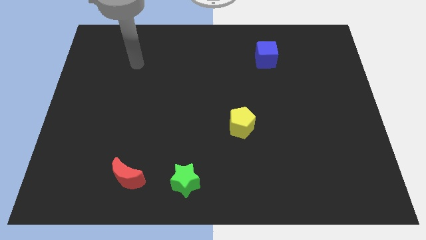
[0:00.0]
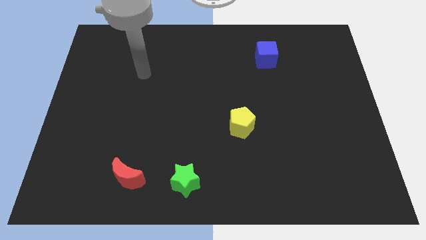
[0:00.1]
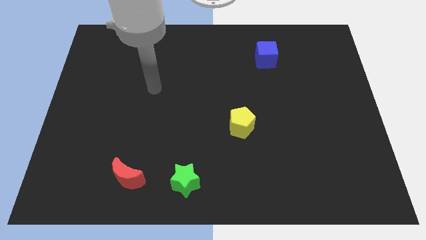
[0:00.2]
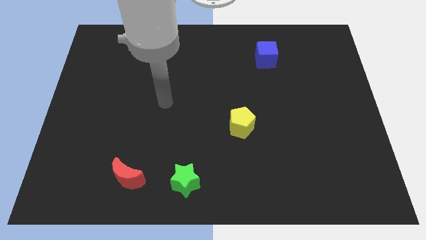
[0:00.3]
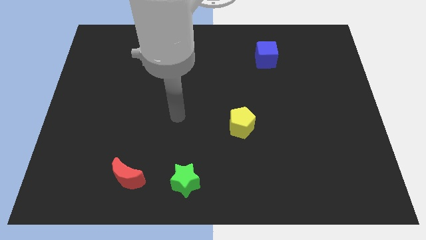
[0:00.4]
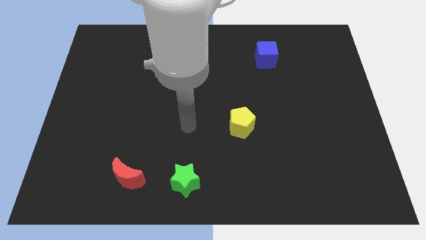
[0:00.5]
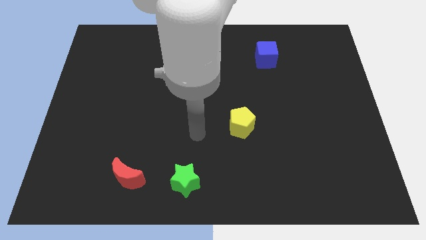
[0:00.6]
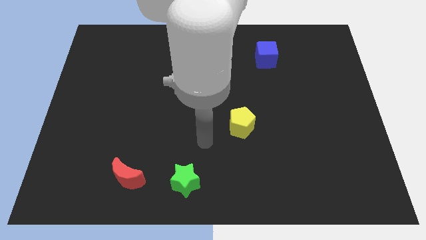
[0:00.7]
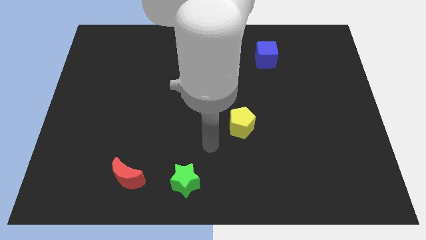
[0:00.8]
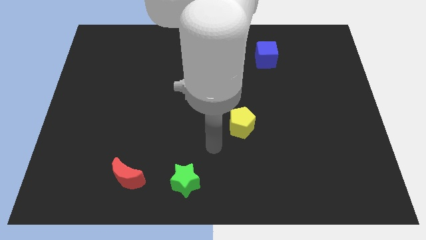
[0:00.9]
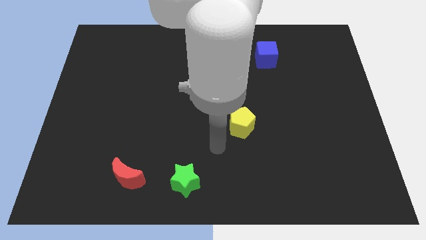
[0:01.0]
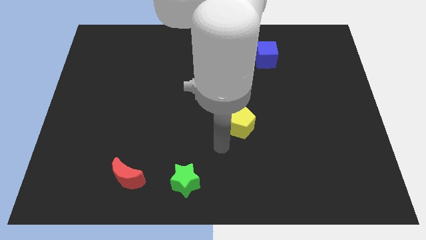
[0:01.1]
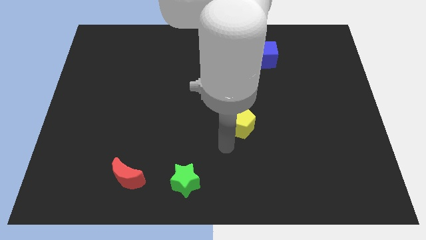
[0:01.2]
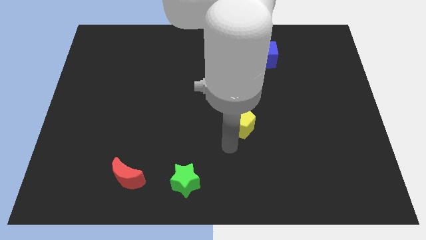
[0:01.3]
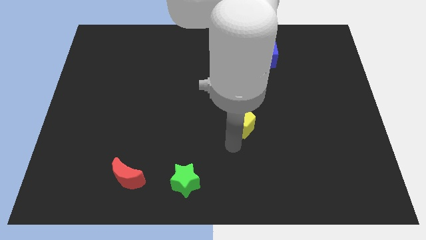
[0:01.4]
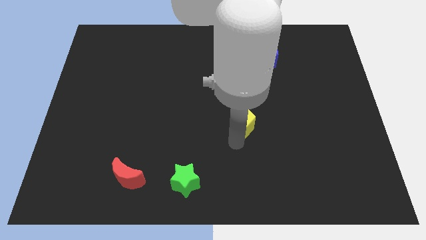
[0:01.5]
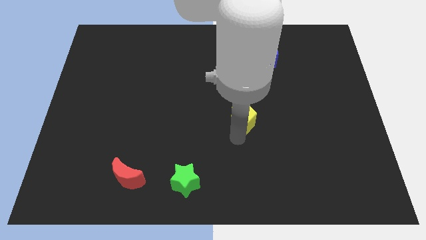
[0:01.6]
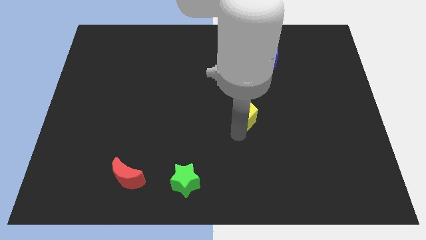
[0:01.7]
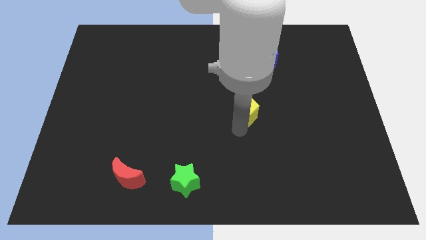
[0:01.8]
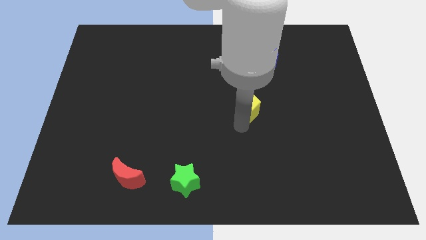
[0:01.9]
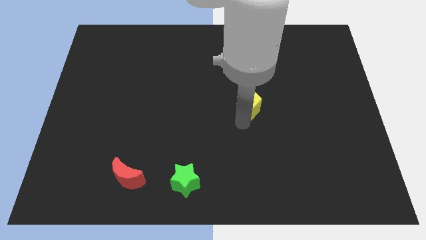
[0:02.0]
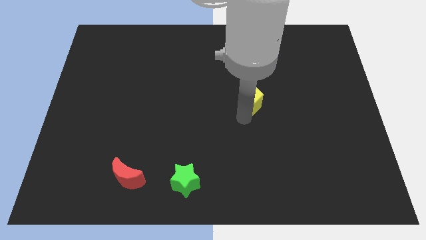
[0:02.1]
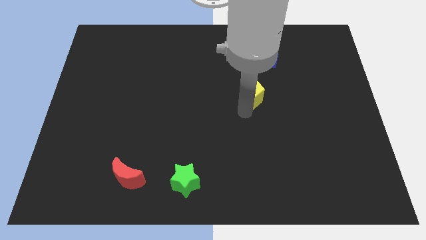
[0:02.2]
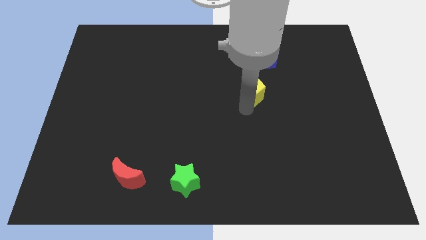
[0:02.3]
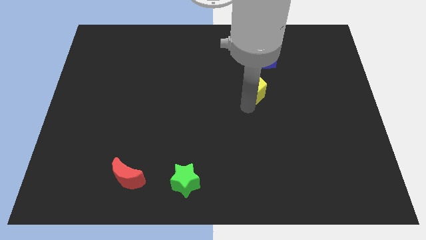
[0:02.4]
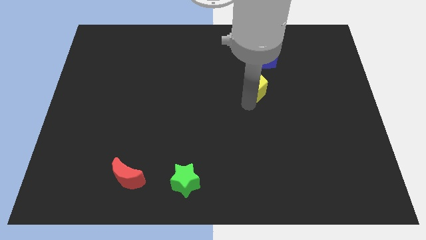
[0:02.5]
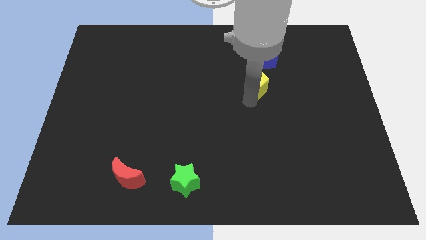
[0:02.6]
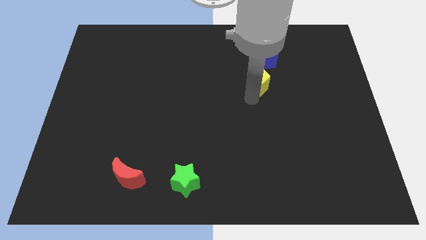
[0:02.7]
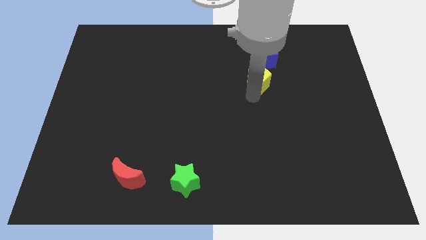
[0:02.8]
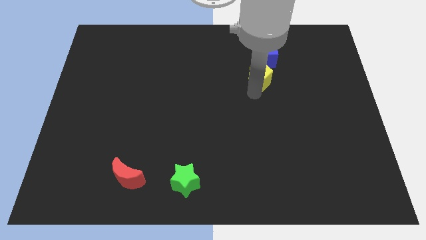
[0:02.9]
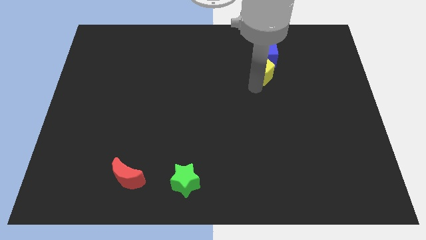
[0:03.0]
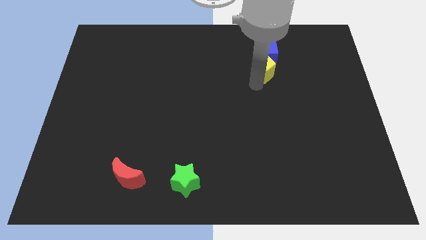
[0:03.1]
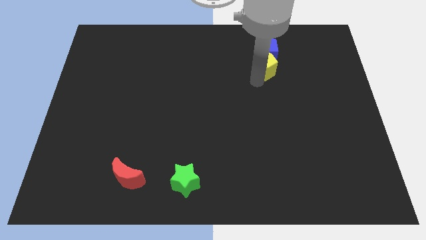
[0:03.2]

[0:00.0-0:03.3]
put the pentagon towards the blue block

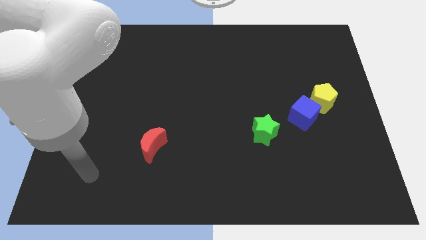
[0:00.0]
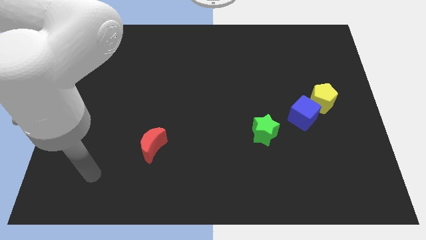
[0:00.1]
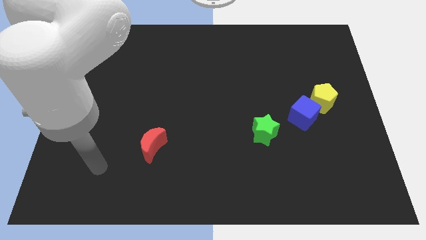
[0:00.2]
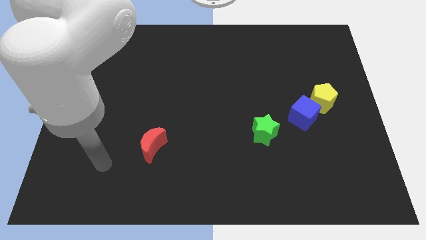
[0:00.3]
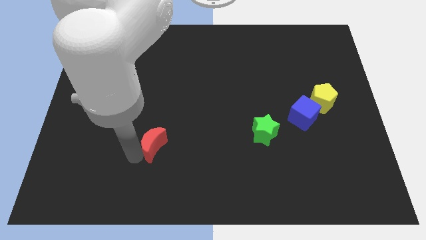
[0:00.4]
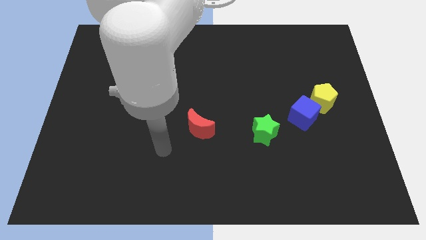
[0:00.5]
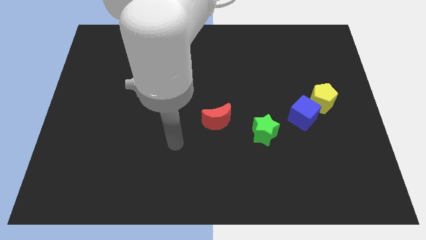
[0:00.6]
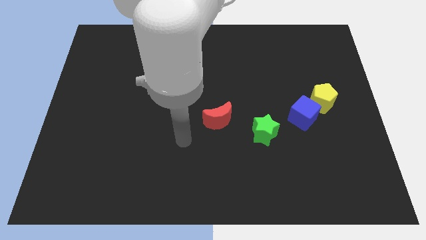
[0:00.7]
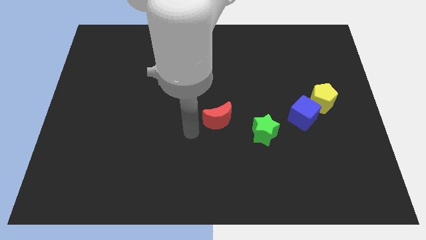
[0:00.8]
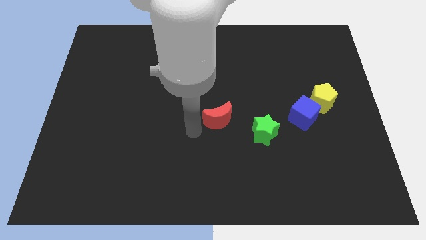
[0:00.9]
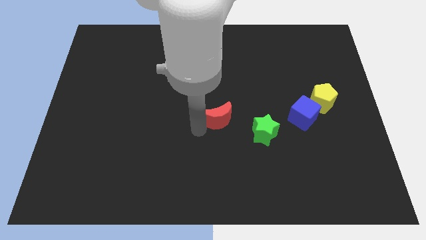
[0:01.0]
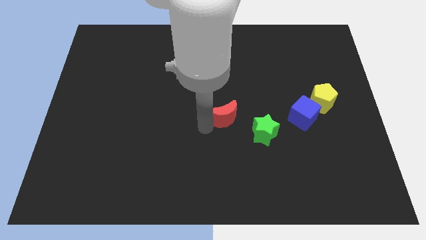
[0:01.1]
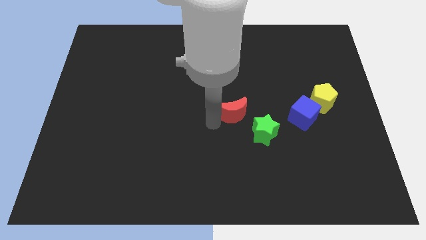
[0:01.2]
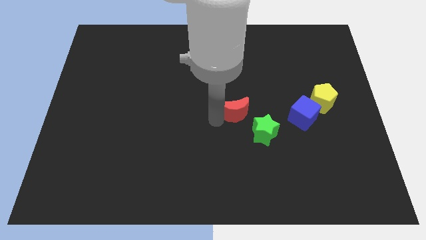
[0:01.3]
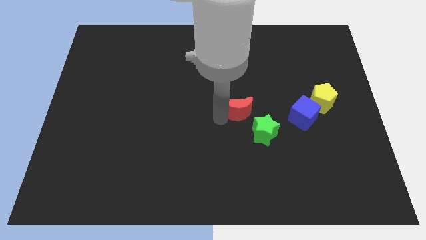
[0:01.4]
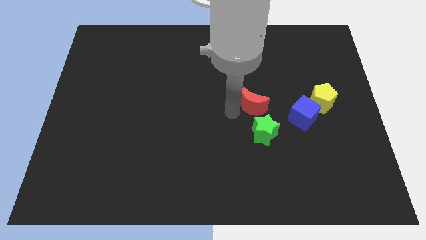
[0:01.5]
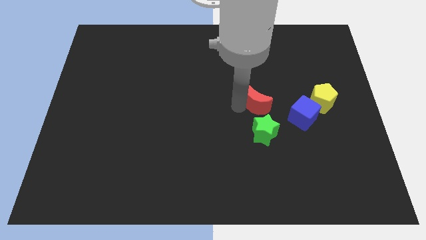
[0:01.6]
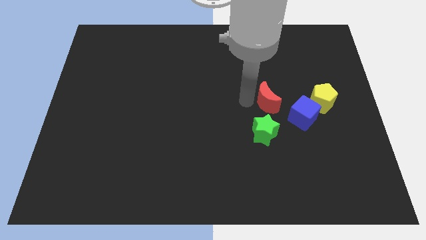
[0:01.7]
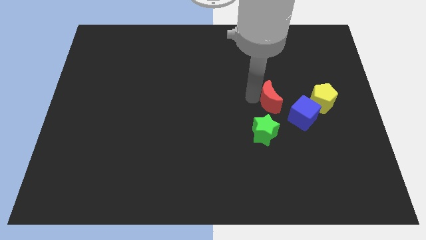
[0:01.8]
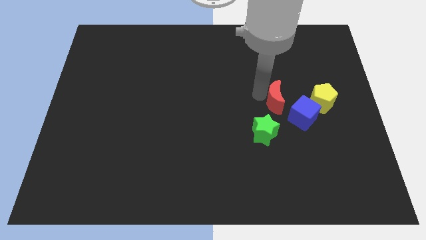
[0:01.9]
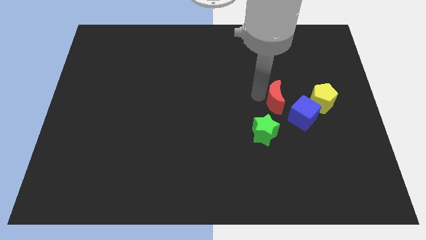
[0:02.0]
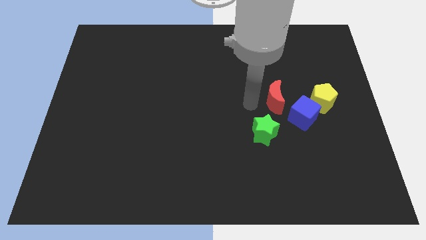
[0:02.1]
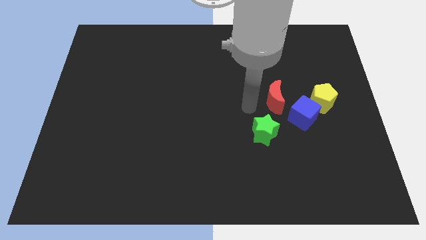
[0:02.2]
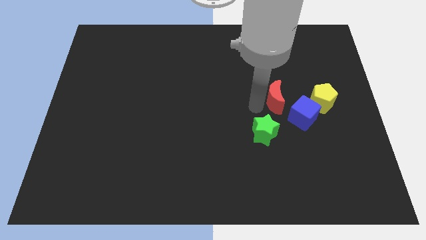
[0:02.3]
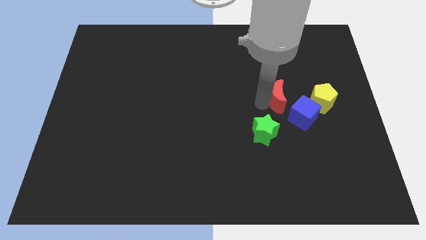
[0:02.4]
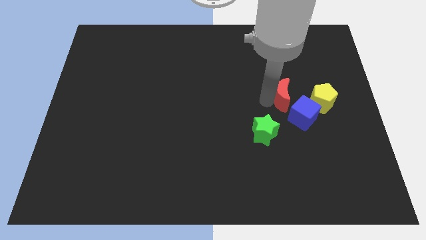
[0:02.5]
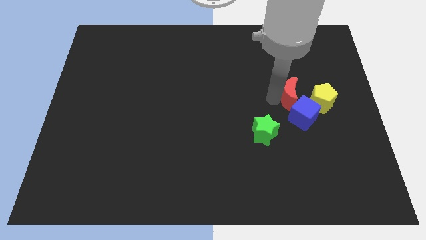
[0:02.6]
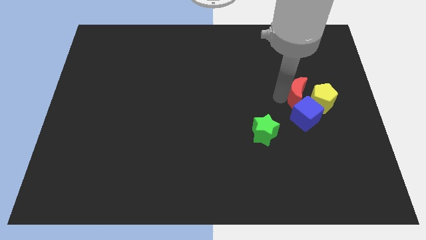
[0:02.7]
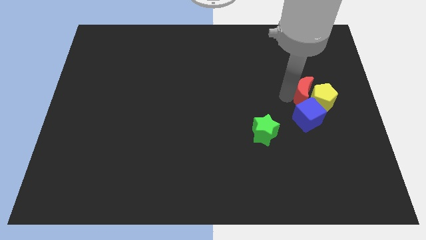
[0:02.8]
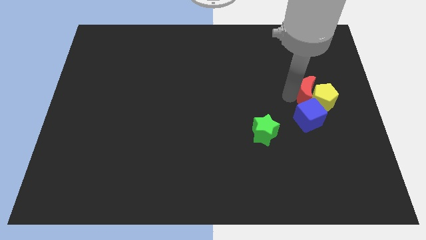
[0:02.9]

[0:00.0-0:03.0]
push the red moon close to the pentagon

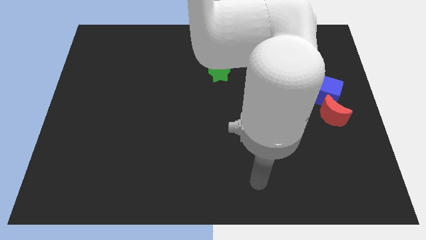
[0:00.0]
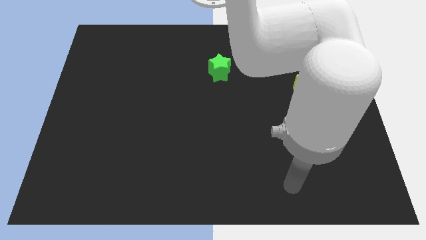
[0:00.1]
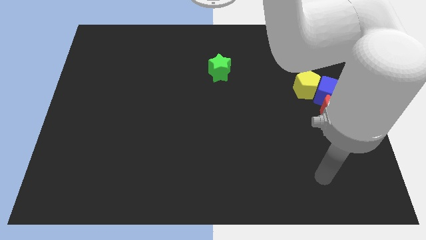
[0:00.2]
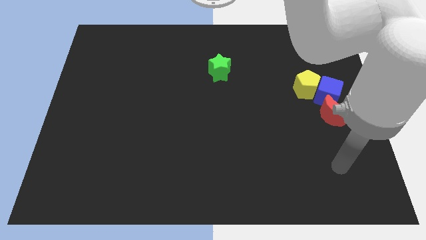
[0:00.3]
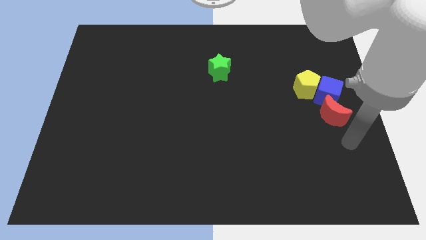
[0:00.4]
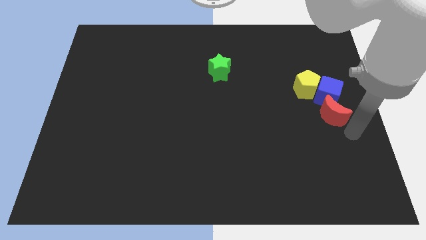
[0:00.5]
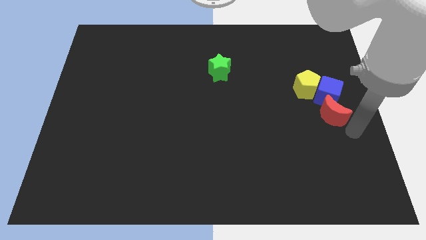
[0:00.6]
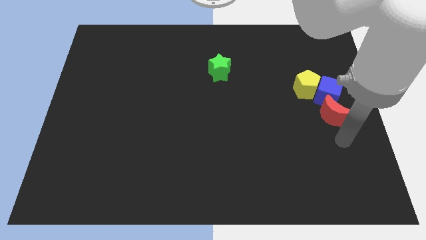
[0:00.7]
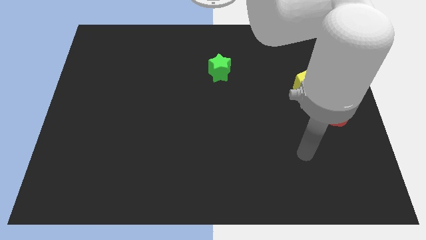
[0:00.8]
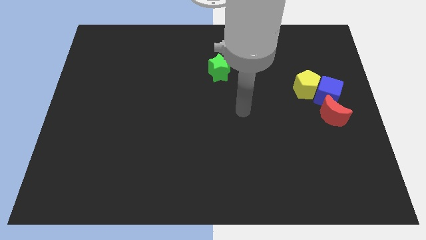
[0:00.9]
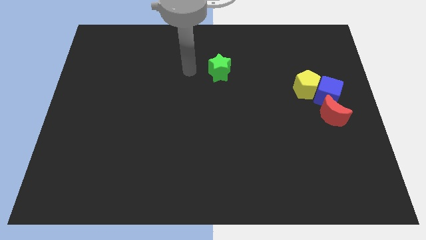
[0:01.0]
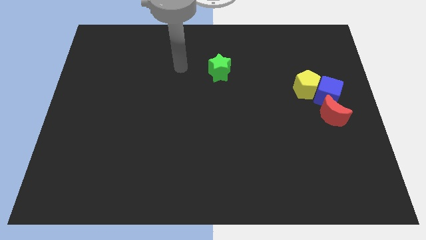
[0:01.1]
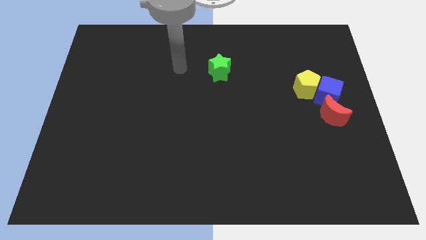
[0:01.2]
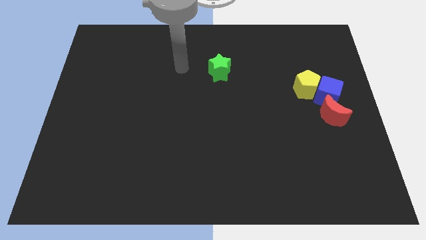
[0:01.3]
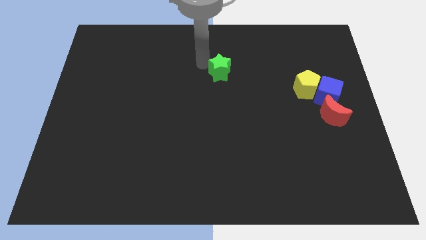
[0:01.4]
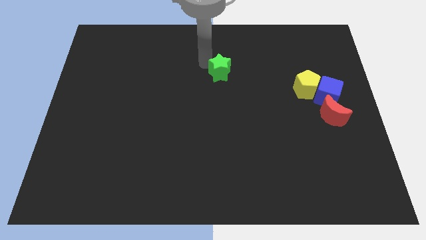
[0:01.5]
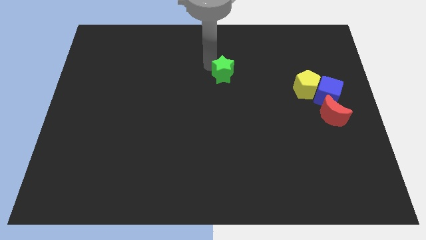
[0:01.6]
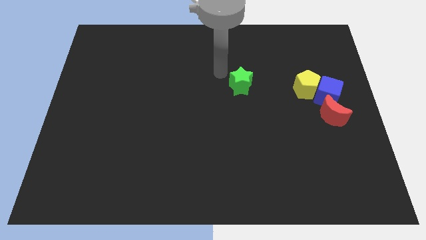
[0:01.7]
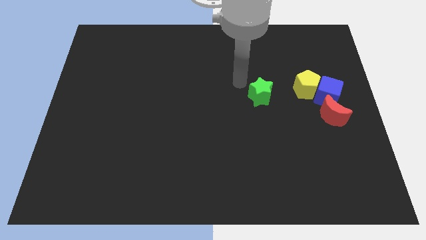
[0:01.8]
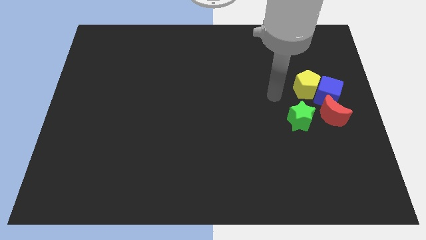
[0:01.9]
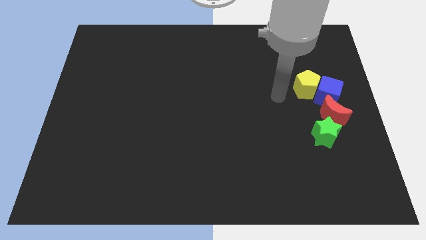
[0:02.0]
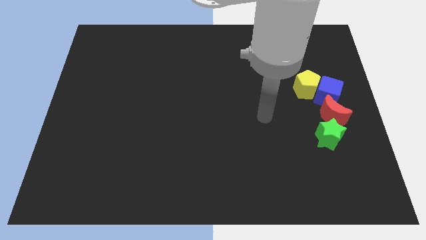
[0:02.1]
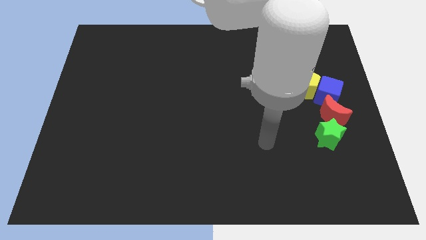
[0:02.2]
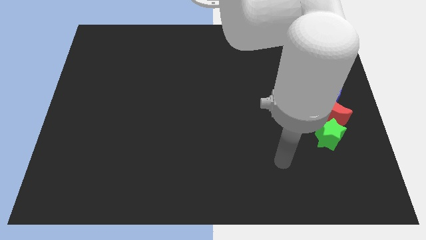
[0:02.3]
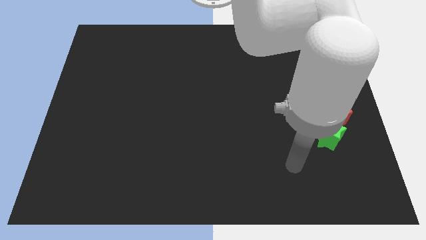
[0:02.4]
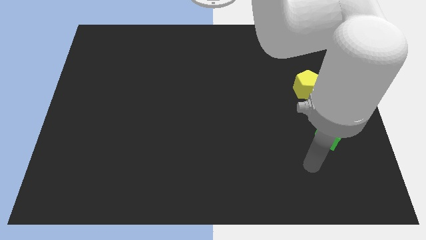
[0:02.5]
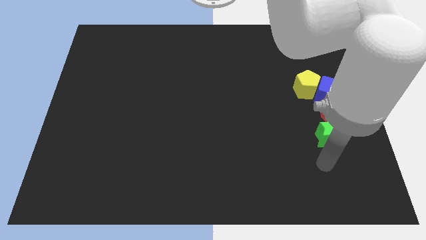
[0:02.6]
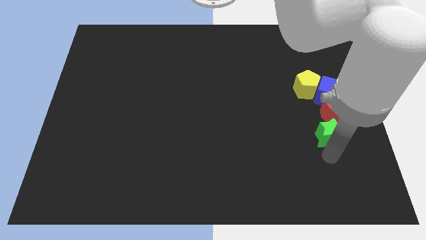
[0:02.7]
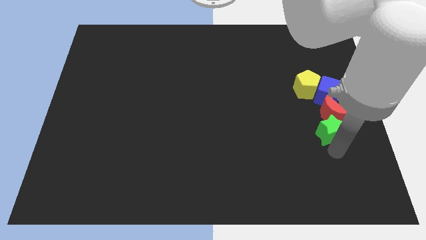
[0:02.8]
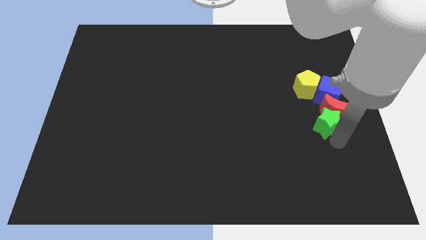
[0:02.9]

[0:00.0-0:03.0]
put the green star next to the red block
